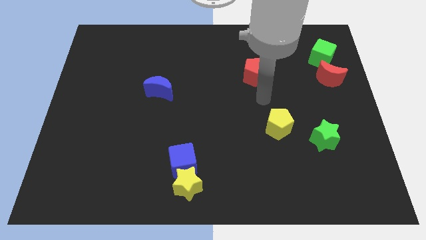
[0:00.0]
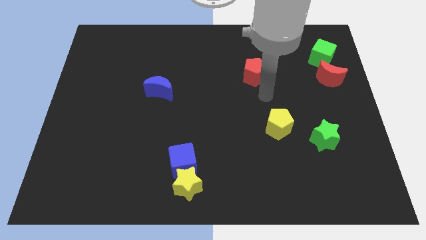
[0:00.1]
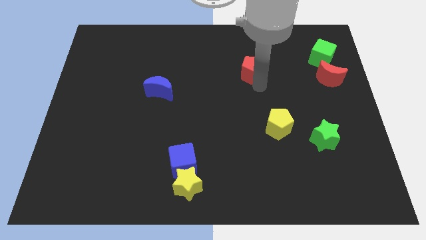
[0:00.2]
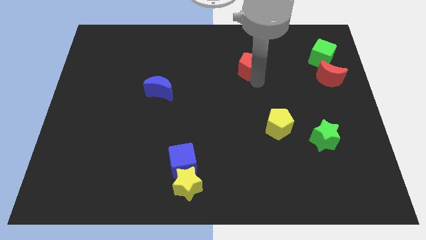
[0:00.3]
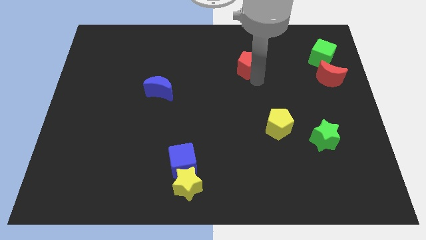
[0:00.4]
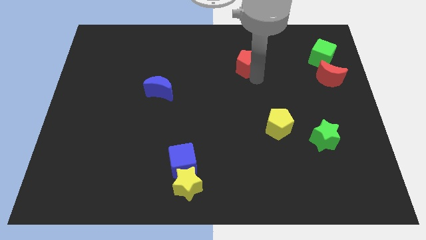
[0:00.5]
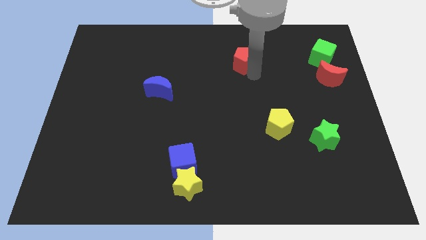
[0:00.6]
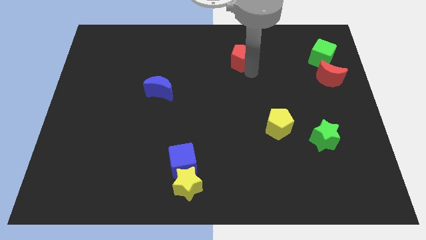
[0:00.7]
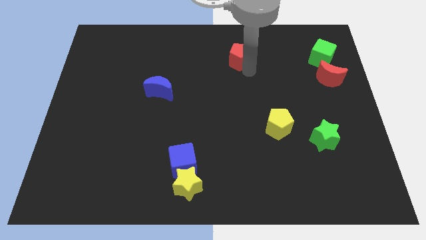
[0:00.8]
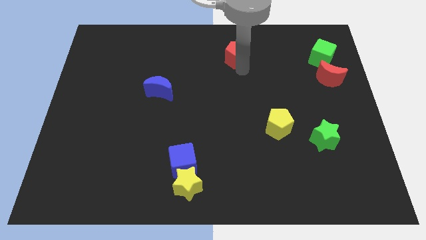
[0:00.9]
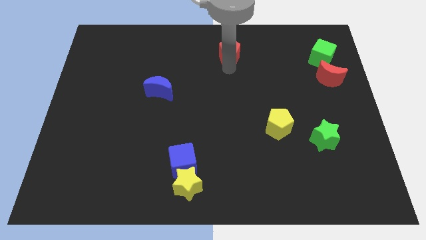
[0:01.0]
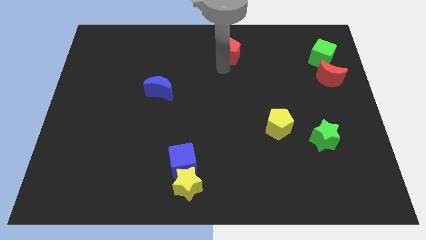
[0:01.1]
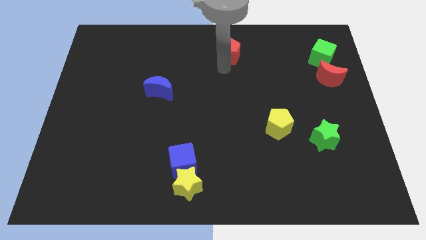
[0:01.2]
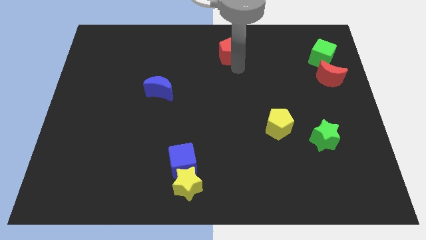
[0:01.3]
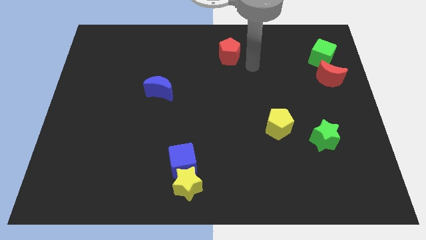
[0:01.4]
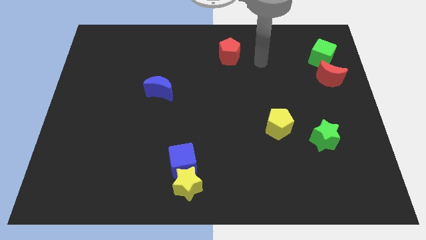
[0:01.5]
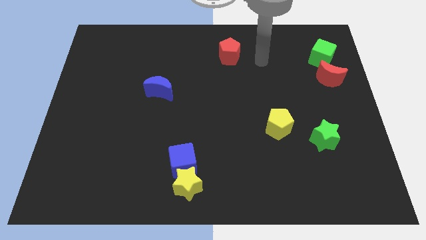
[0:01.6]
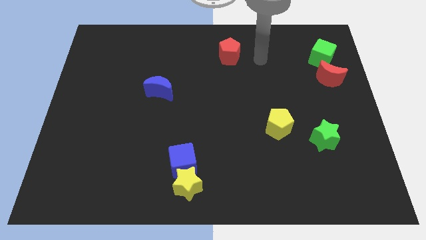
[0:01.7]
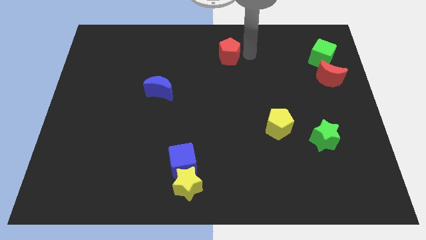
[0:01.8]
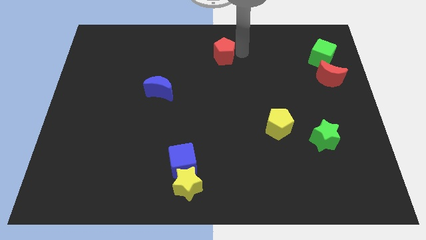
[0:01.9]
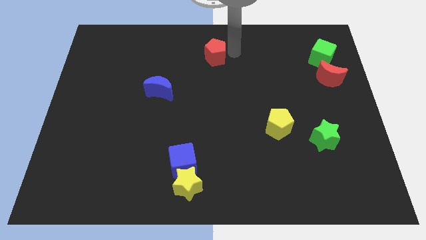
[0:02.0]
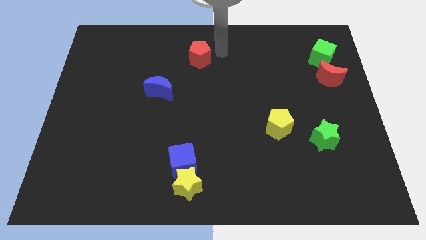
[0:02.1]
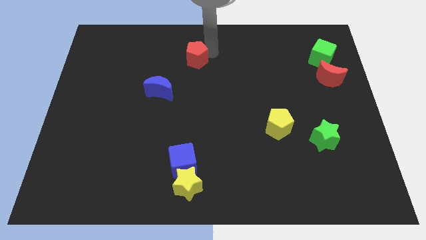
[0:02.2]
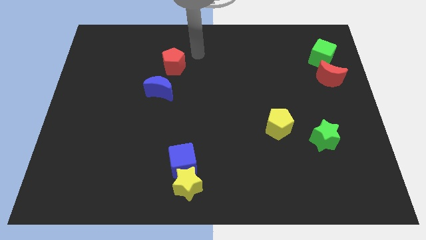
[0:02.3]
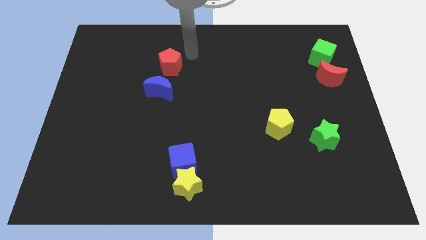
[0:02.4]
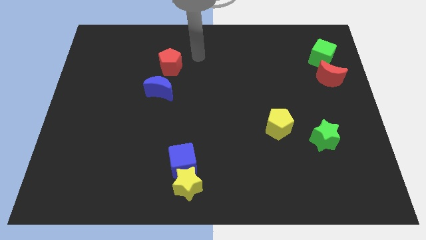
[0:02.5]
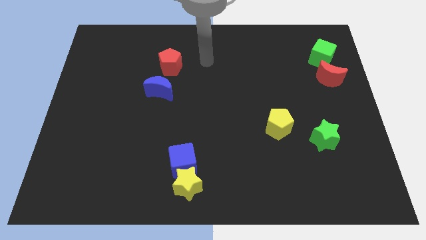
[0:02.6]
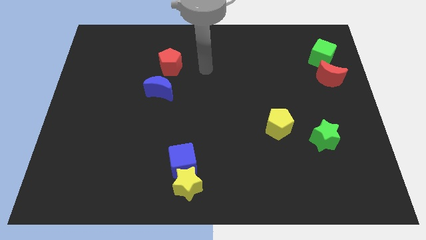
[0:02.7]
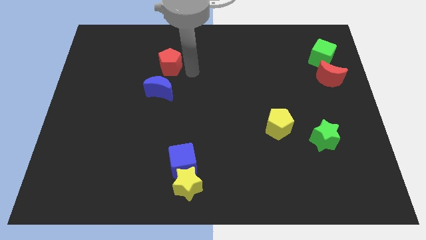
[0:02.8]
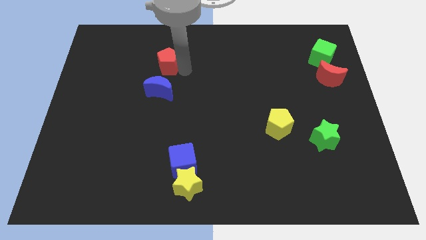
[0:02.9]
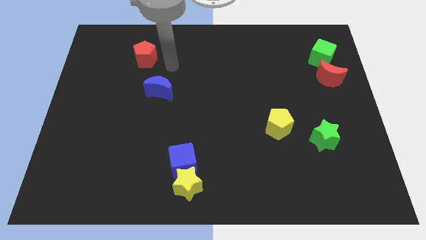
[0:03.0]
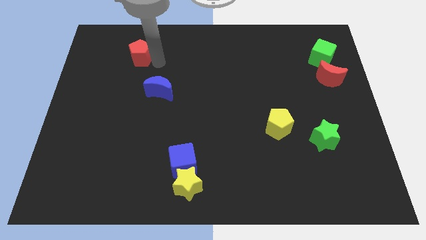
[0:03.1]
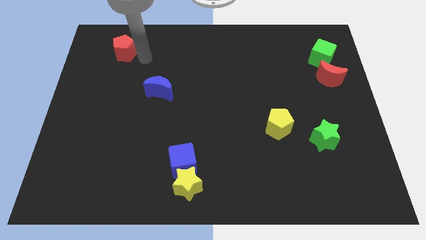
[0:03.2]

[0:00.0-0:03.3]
place the red pentagon above the blue moon

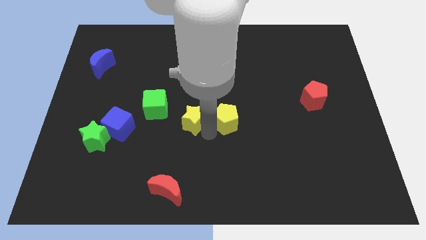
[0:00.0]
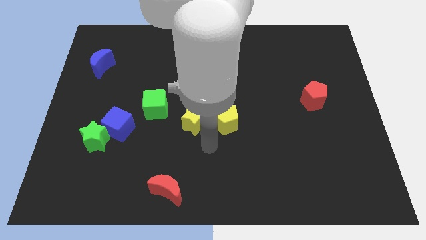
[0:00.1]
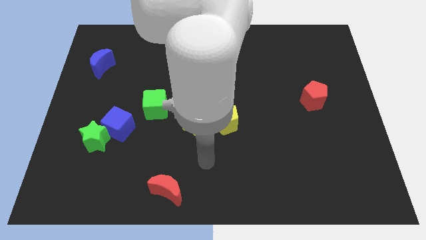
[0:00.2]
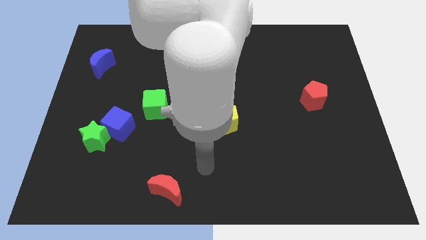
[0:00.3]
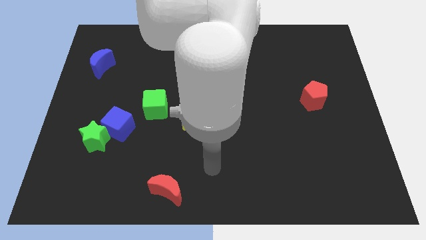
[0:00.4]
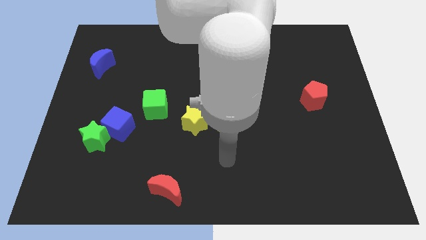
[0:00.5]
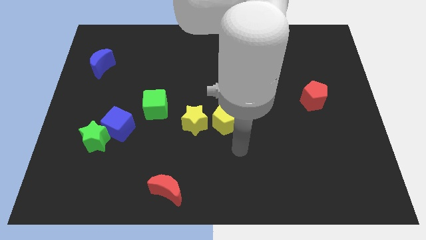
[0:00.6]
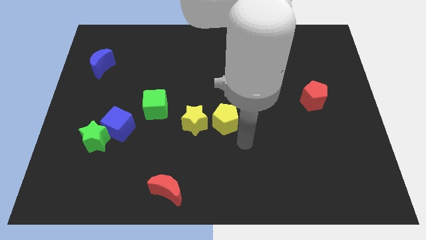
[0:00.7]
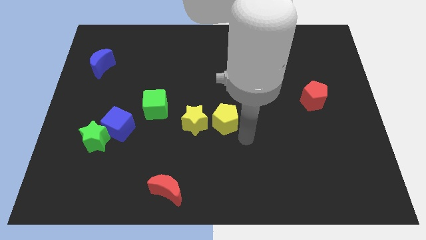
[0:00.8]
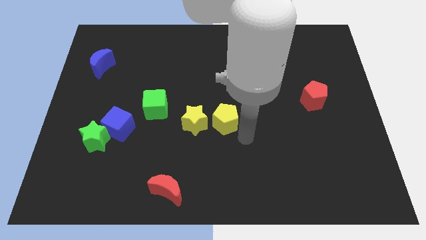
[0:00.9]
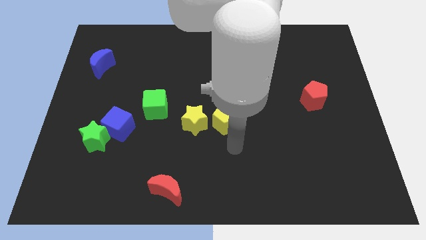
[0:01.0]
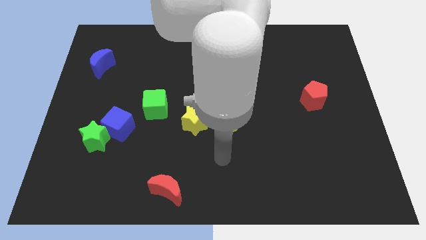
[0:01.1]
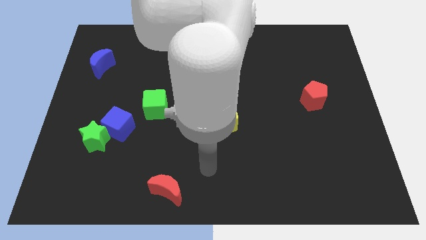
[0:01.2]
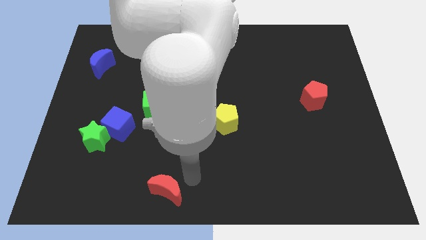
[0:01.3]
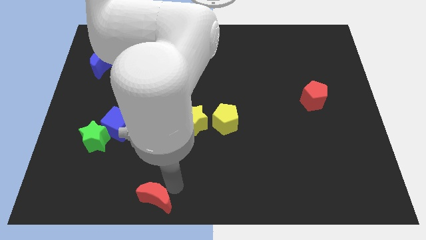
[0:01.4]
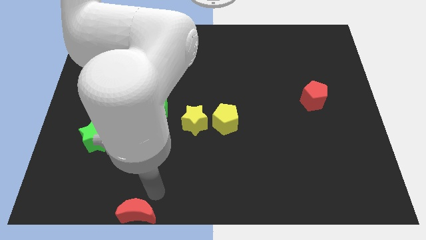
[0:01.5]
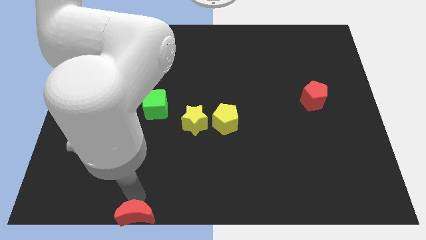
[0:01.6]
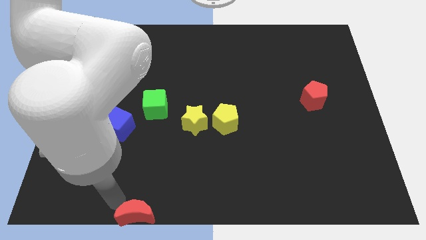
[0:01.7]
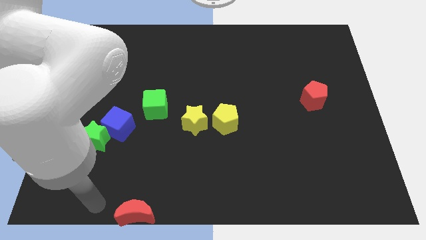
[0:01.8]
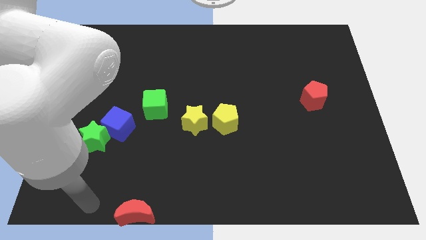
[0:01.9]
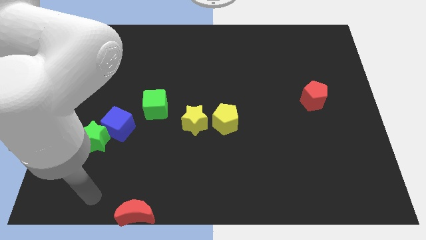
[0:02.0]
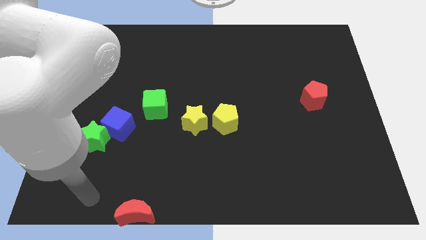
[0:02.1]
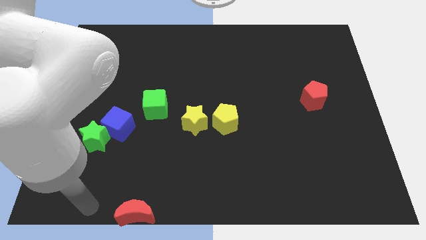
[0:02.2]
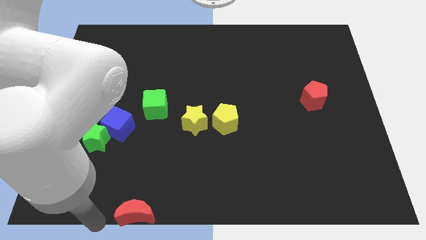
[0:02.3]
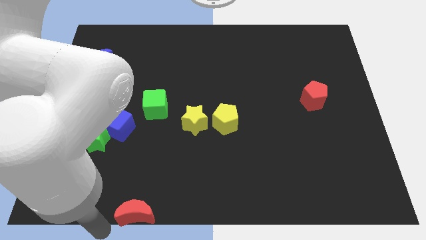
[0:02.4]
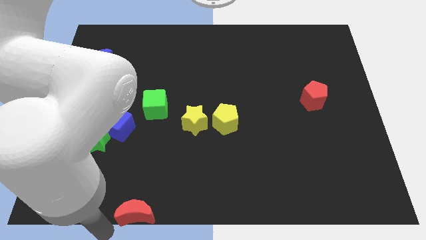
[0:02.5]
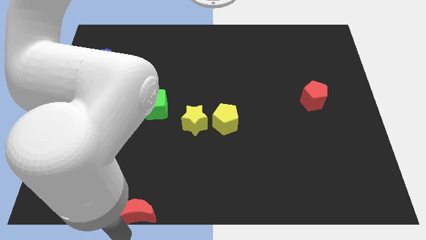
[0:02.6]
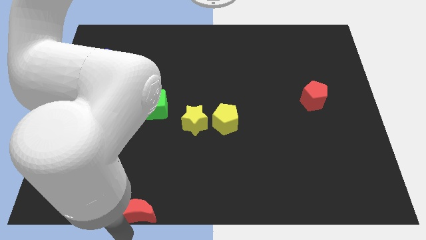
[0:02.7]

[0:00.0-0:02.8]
move the red crescent to the bottom of the board

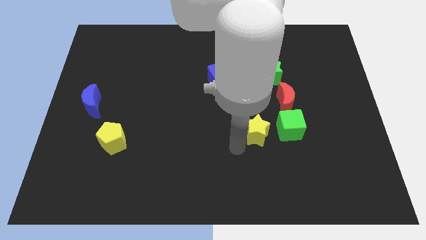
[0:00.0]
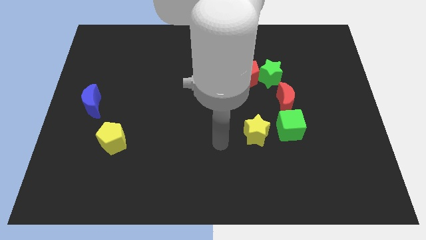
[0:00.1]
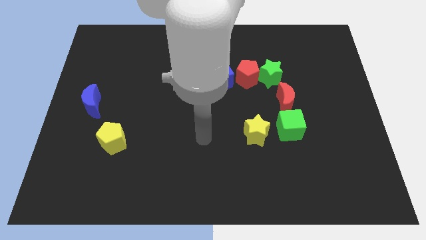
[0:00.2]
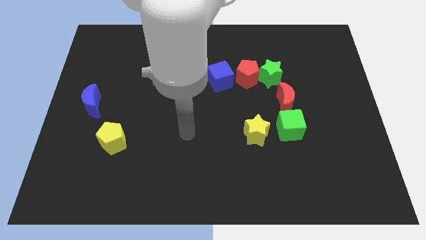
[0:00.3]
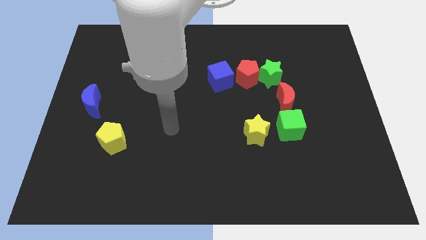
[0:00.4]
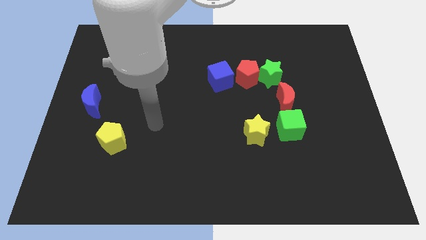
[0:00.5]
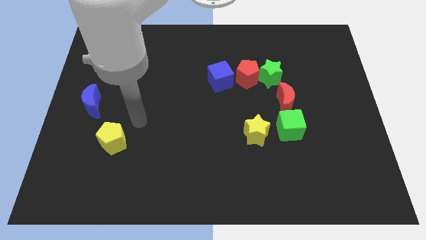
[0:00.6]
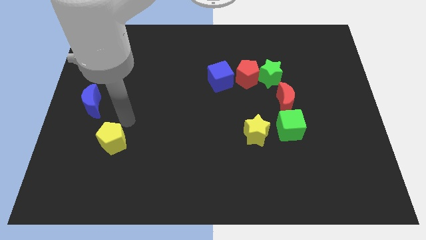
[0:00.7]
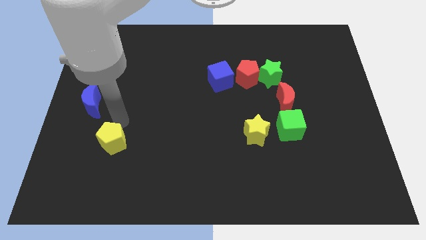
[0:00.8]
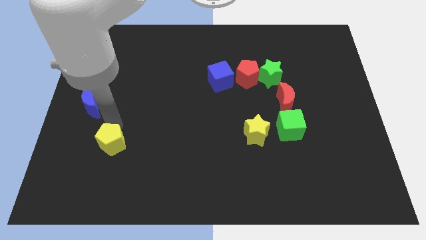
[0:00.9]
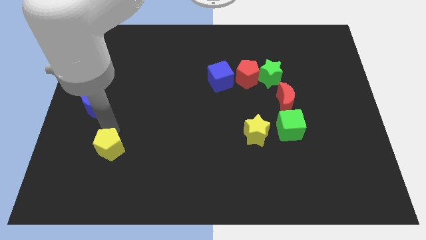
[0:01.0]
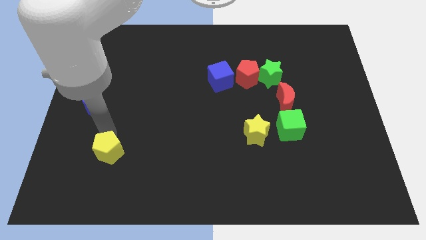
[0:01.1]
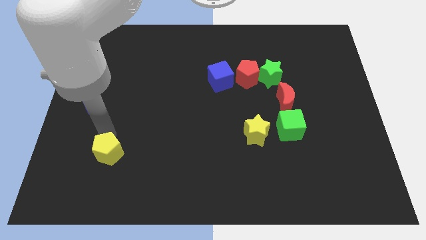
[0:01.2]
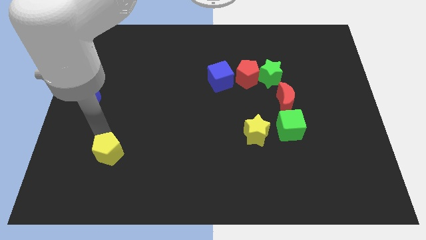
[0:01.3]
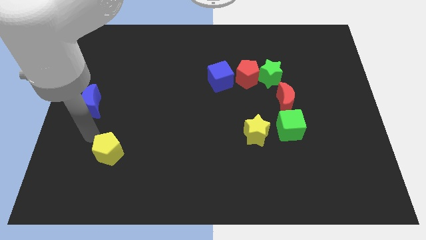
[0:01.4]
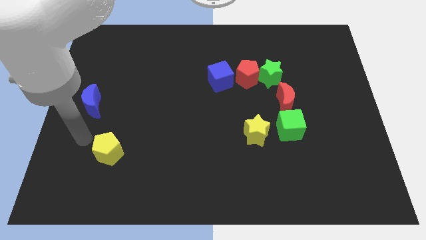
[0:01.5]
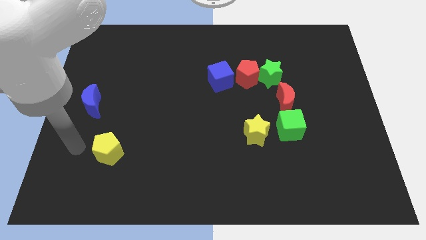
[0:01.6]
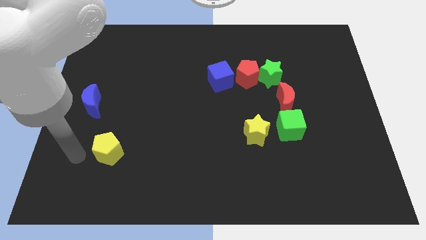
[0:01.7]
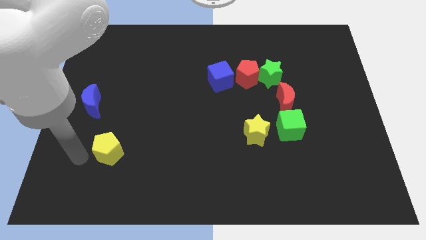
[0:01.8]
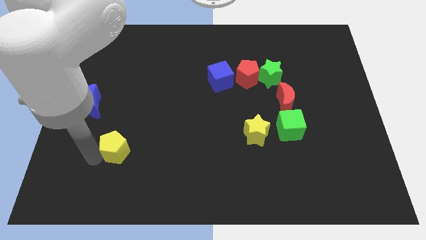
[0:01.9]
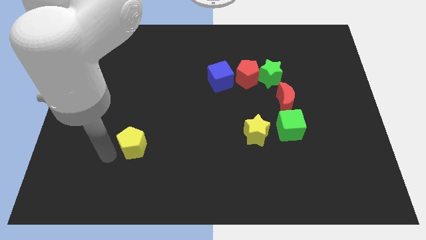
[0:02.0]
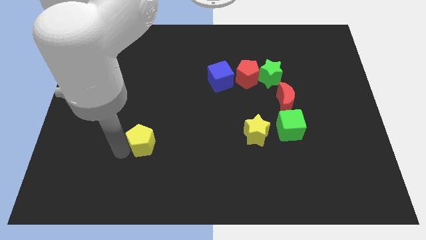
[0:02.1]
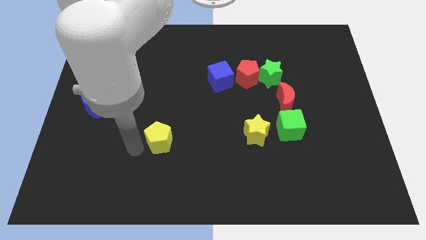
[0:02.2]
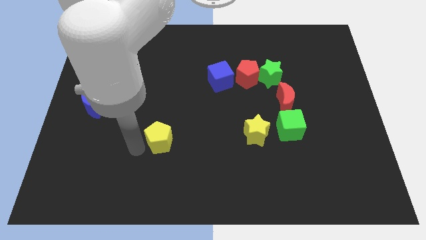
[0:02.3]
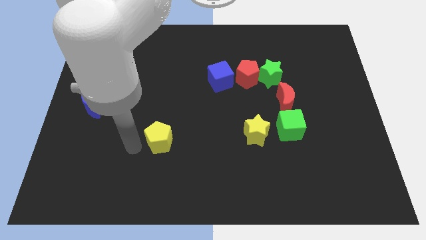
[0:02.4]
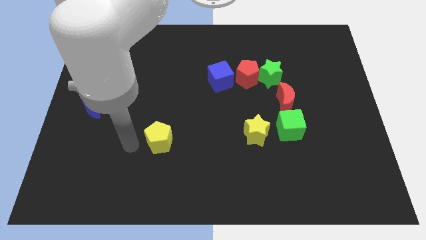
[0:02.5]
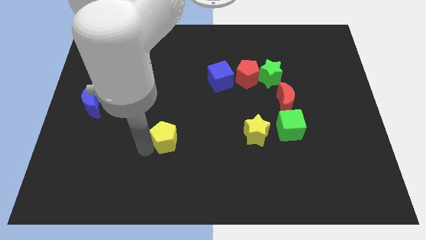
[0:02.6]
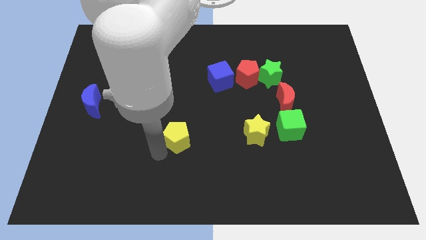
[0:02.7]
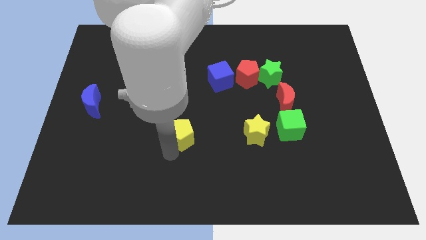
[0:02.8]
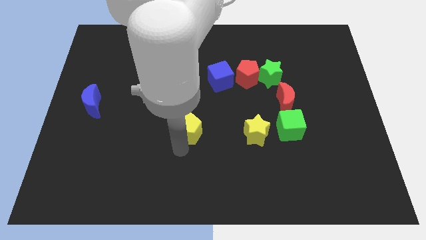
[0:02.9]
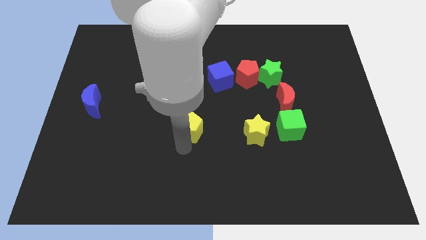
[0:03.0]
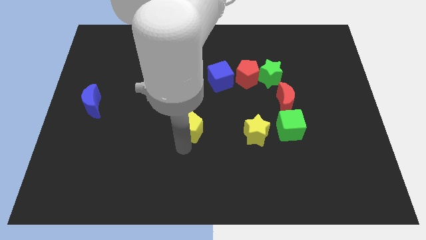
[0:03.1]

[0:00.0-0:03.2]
drag the yellow pentagon towards the blue cube
